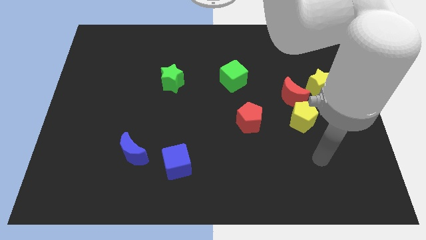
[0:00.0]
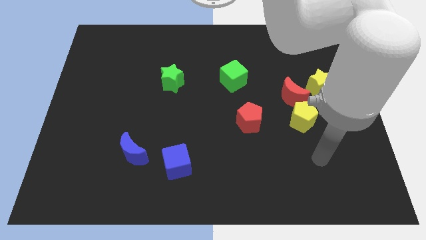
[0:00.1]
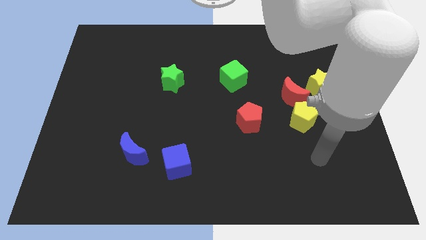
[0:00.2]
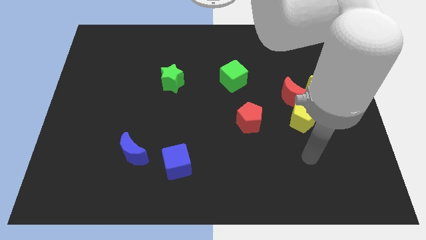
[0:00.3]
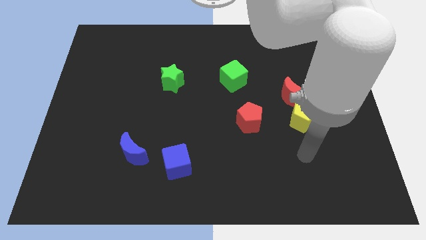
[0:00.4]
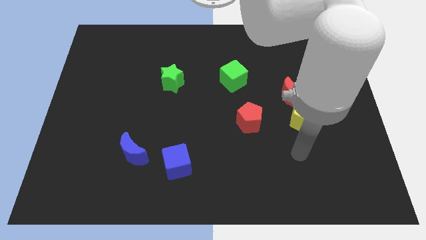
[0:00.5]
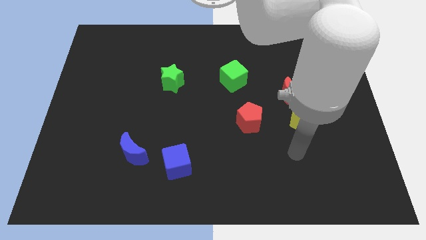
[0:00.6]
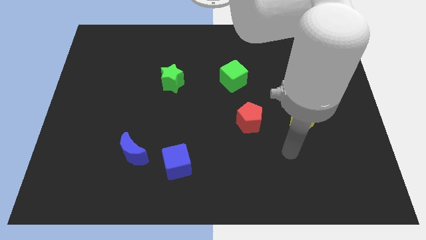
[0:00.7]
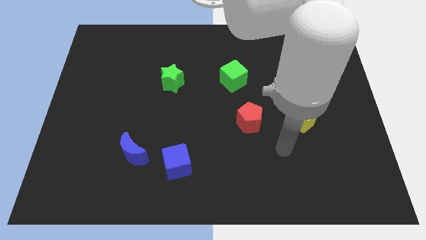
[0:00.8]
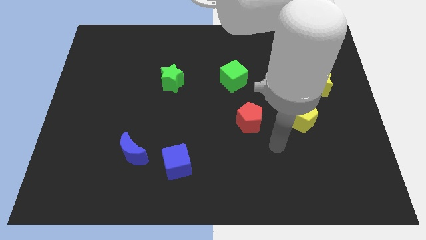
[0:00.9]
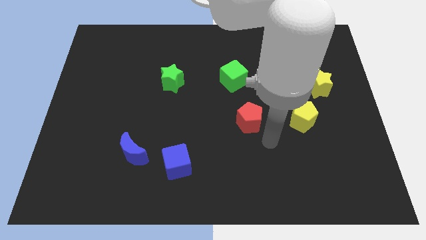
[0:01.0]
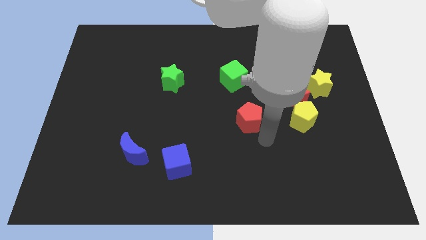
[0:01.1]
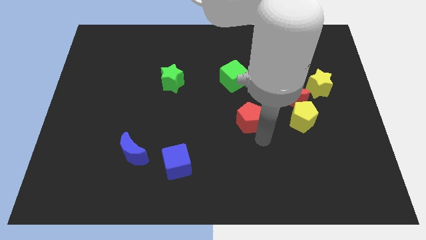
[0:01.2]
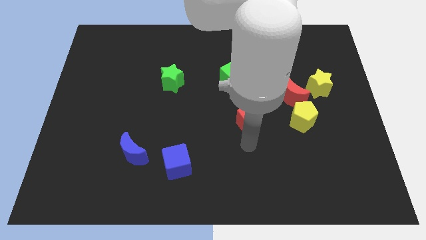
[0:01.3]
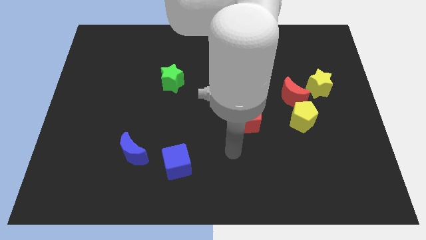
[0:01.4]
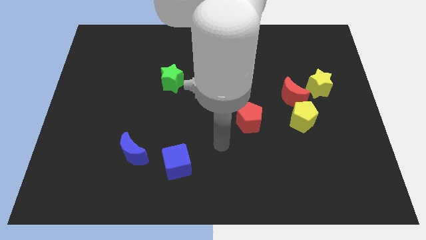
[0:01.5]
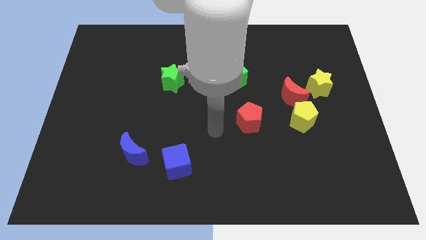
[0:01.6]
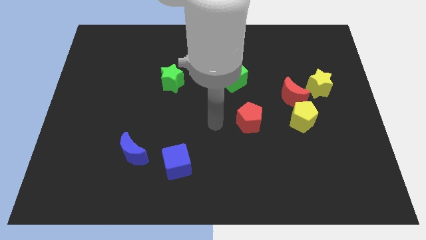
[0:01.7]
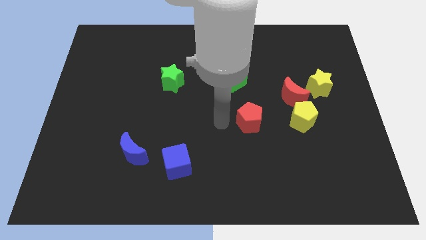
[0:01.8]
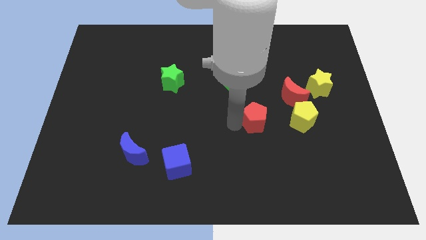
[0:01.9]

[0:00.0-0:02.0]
place arm left to the red pentagon

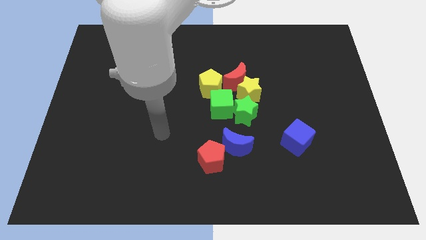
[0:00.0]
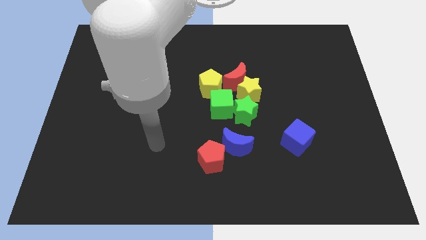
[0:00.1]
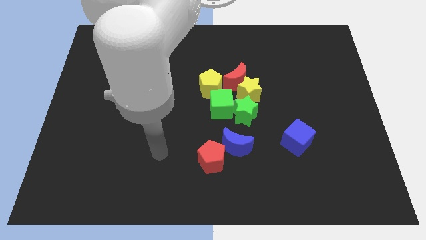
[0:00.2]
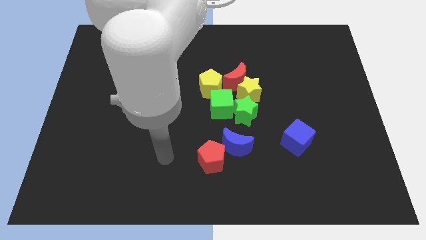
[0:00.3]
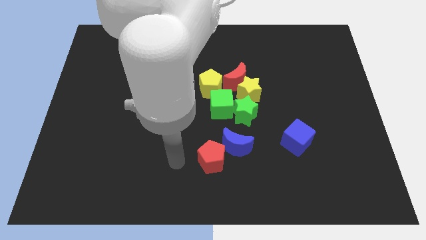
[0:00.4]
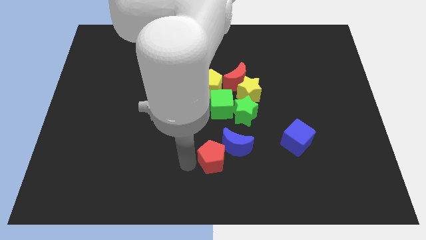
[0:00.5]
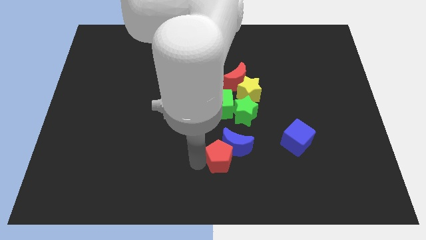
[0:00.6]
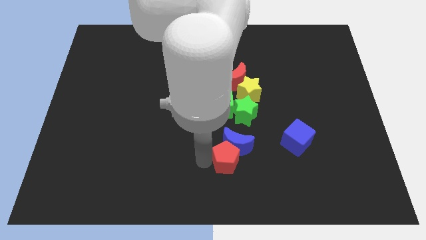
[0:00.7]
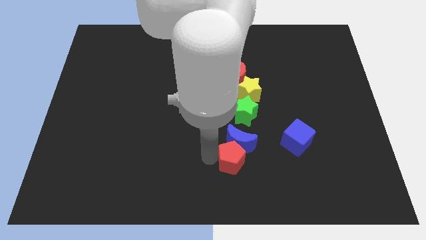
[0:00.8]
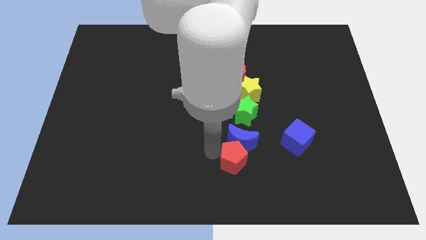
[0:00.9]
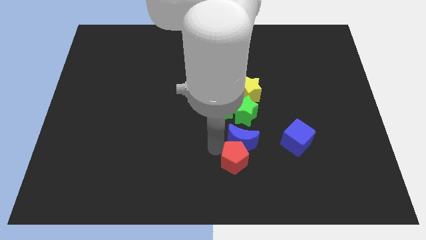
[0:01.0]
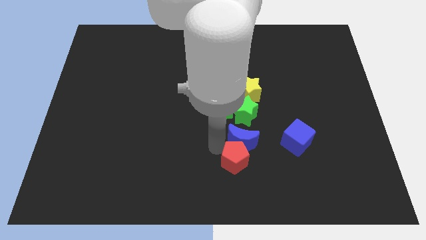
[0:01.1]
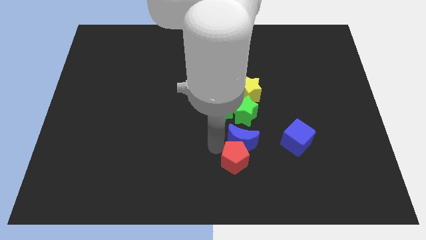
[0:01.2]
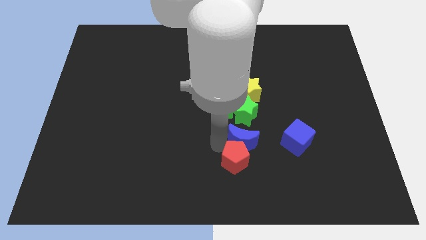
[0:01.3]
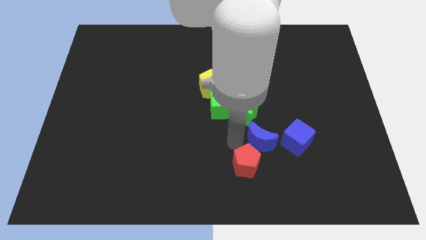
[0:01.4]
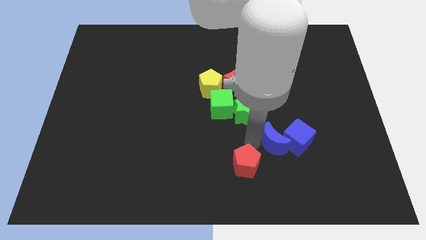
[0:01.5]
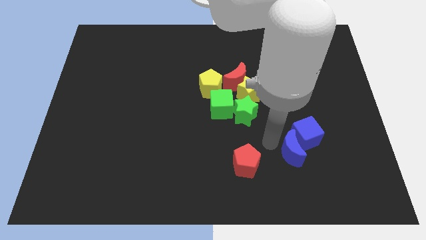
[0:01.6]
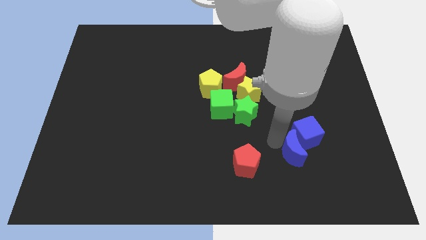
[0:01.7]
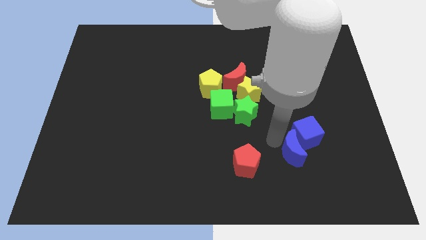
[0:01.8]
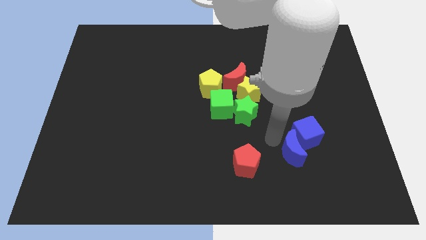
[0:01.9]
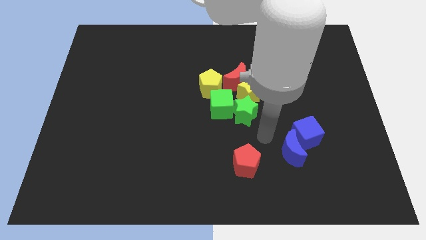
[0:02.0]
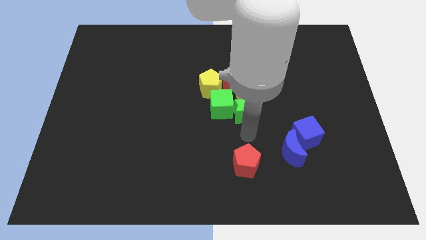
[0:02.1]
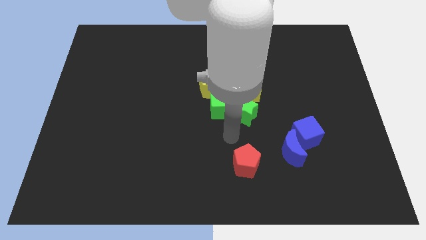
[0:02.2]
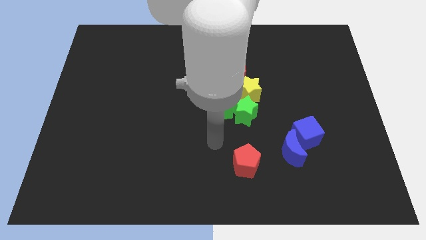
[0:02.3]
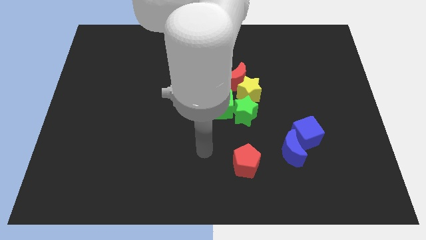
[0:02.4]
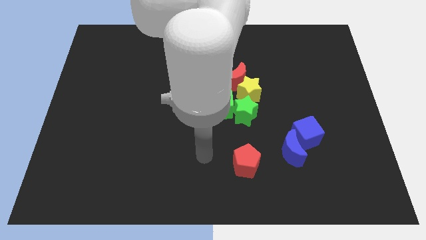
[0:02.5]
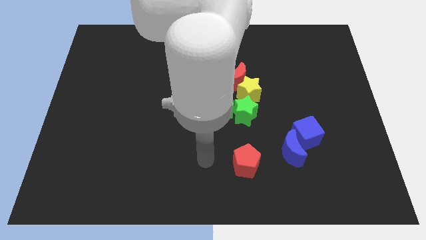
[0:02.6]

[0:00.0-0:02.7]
slide the blue moon into the blue cube

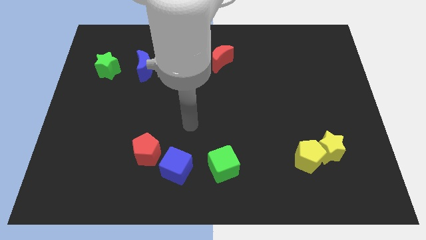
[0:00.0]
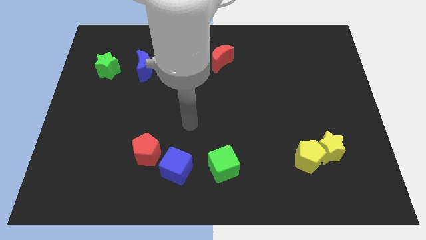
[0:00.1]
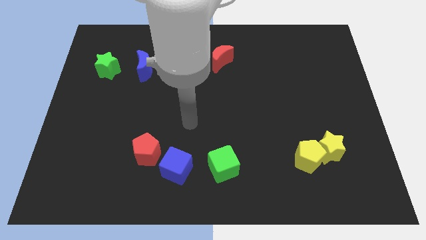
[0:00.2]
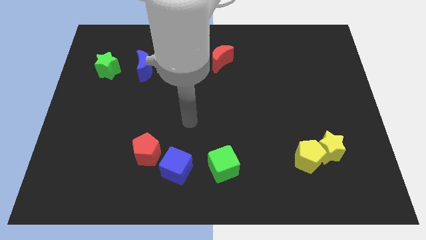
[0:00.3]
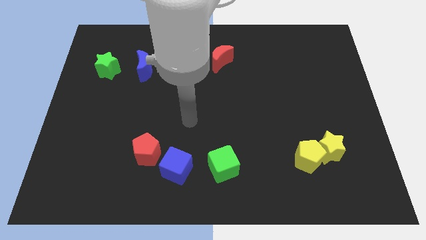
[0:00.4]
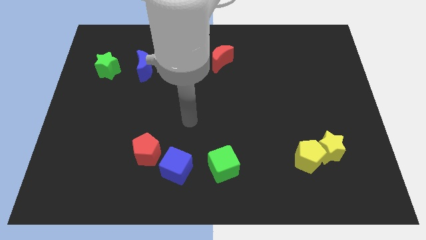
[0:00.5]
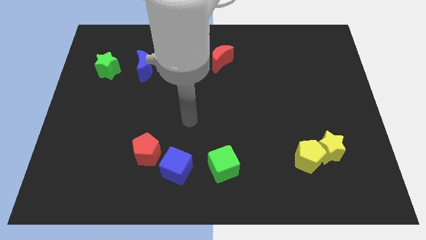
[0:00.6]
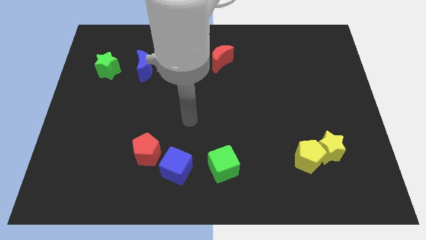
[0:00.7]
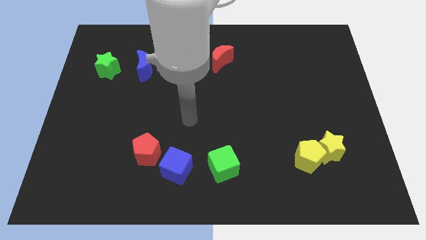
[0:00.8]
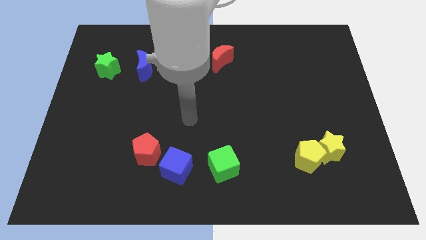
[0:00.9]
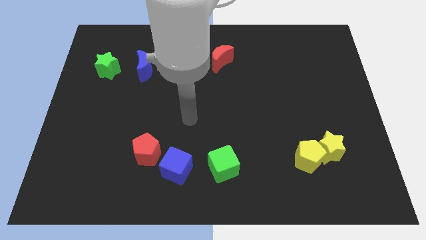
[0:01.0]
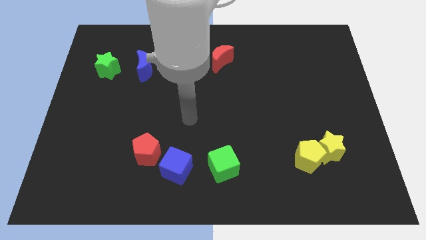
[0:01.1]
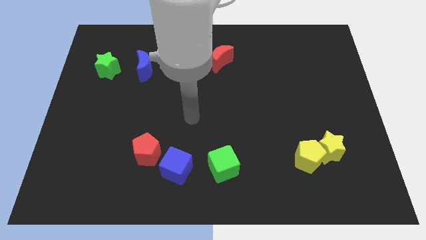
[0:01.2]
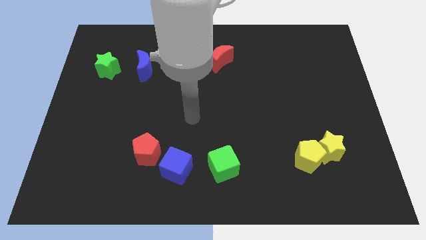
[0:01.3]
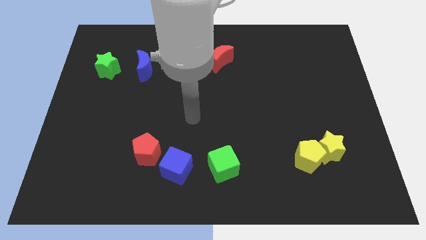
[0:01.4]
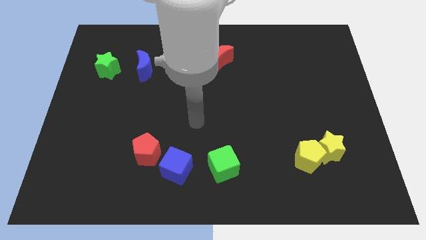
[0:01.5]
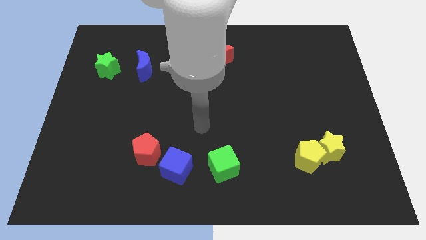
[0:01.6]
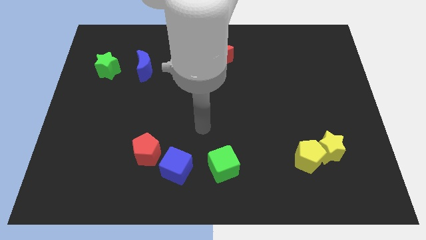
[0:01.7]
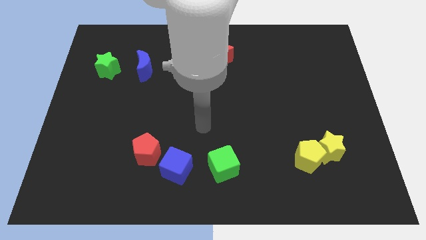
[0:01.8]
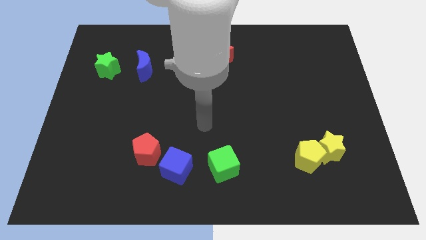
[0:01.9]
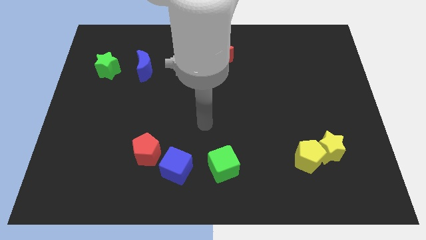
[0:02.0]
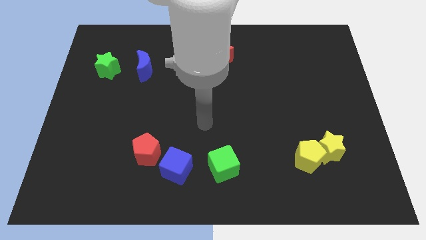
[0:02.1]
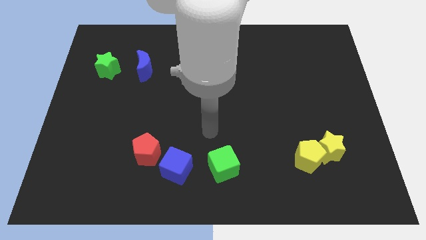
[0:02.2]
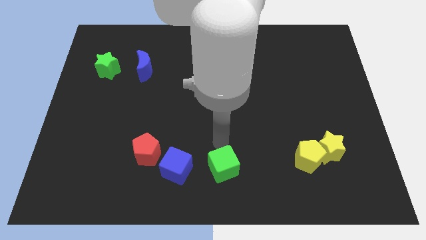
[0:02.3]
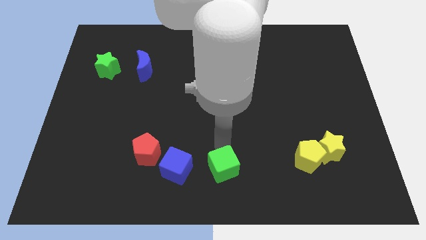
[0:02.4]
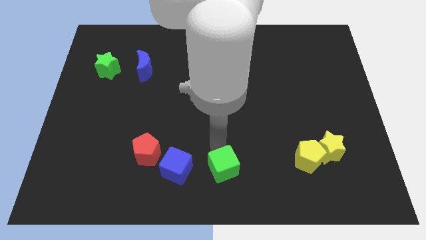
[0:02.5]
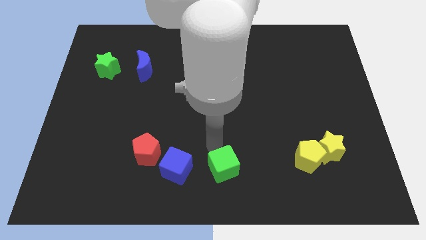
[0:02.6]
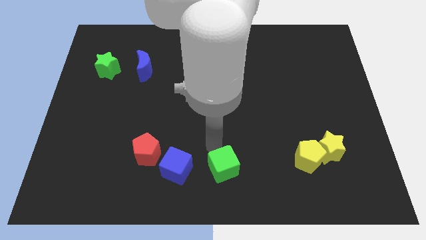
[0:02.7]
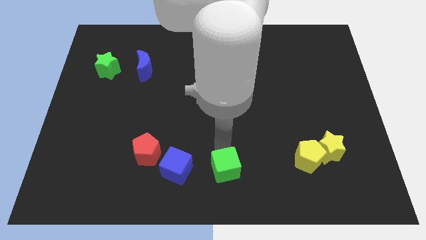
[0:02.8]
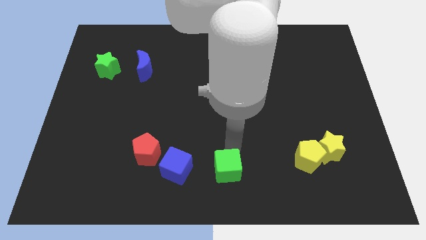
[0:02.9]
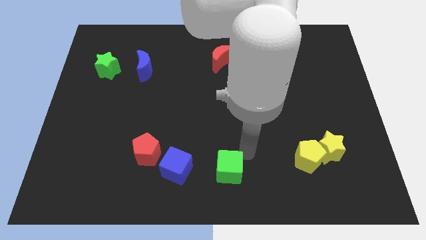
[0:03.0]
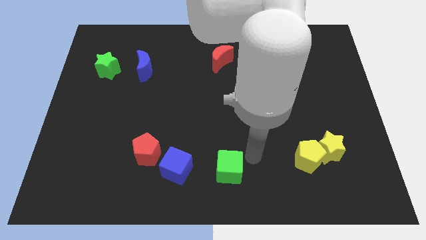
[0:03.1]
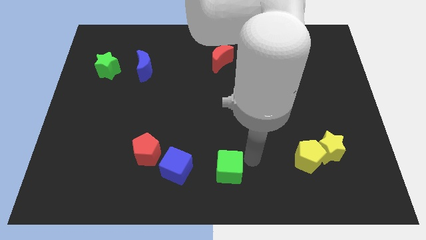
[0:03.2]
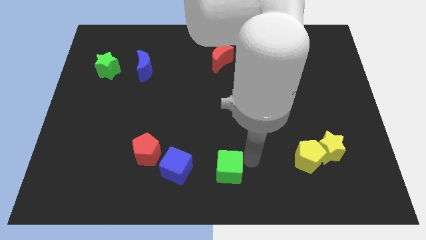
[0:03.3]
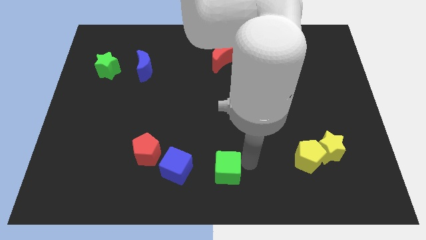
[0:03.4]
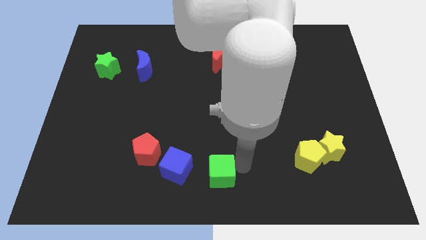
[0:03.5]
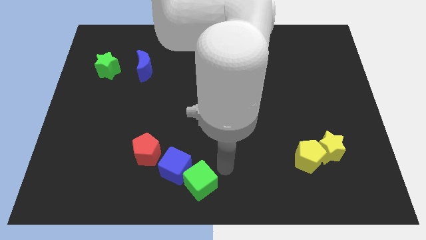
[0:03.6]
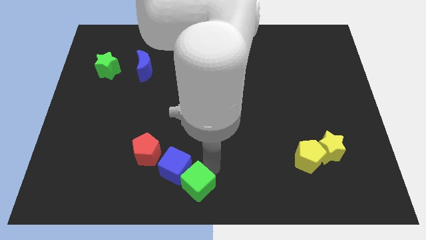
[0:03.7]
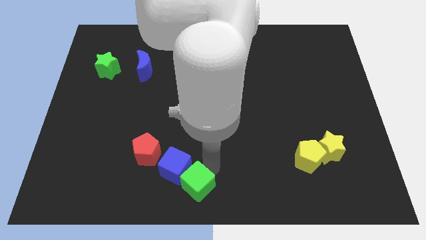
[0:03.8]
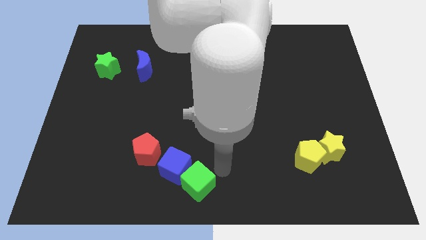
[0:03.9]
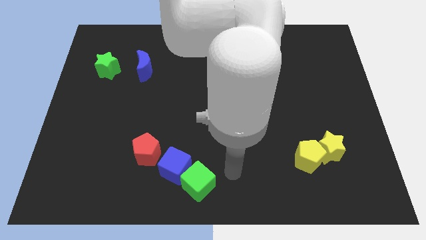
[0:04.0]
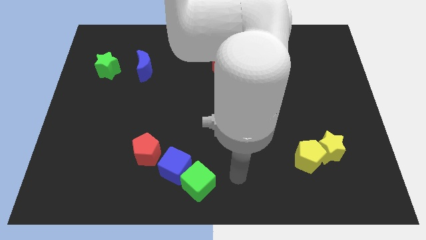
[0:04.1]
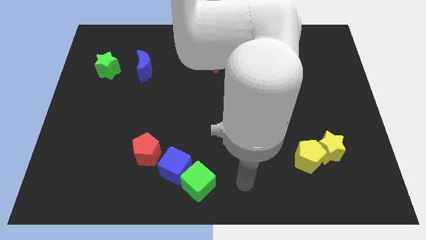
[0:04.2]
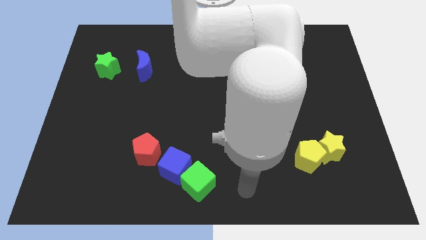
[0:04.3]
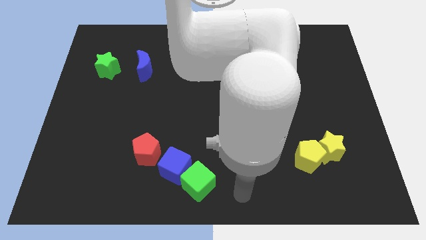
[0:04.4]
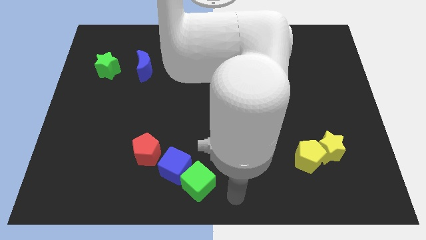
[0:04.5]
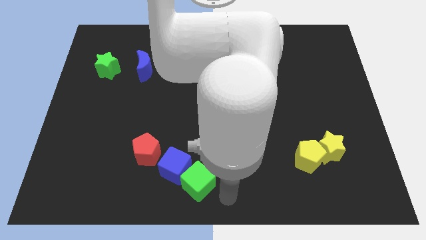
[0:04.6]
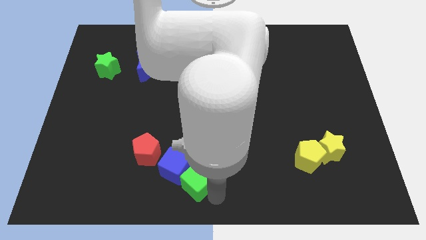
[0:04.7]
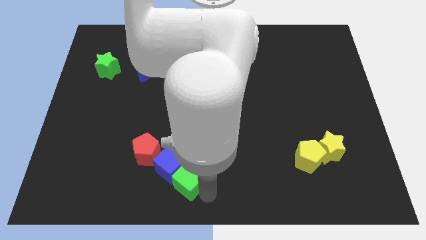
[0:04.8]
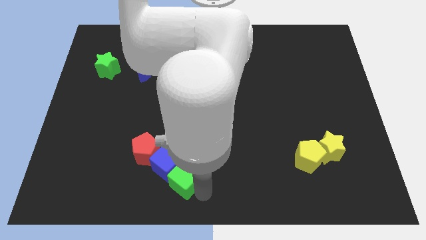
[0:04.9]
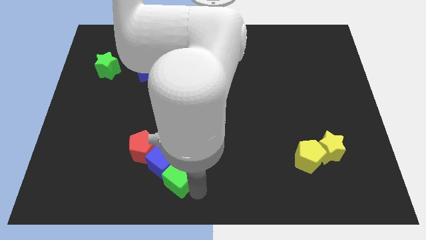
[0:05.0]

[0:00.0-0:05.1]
push the green cube into the blue cube
